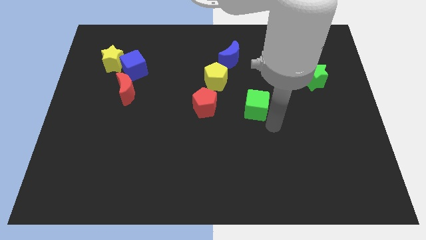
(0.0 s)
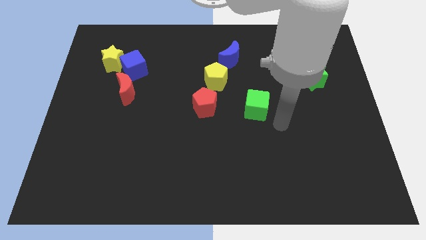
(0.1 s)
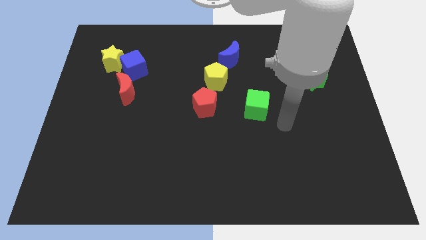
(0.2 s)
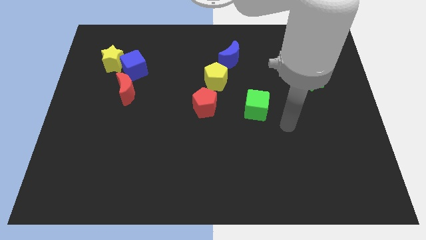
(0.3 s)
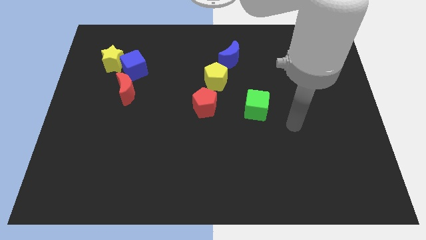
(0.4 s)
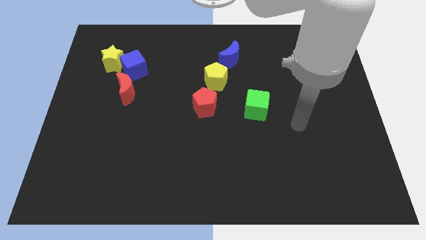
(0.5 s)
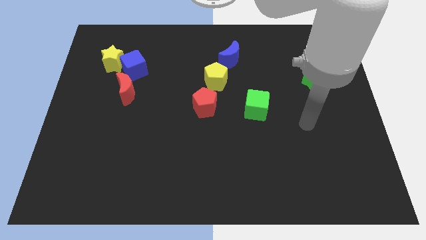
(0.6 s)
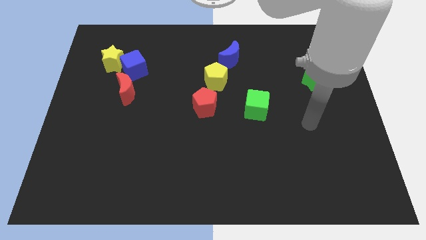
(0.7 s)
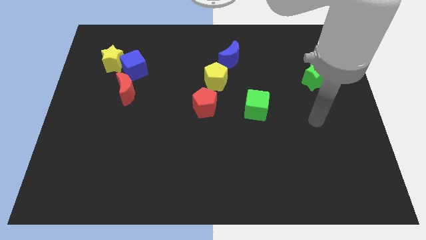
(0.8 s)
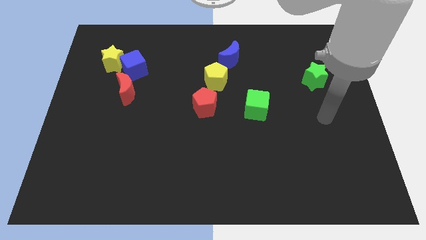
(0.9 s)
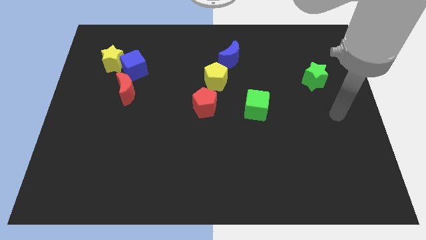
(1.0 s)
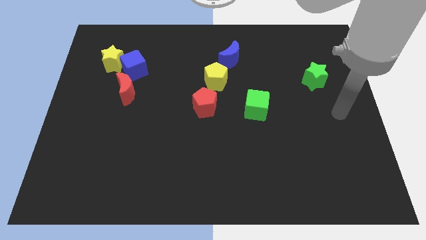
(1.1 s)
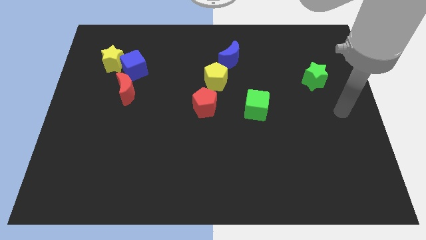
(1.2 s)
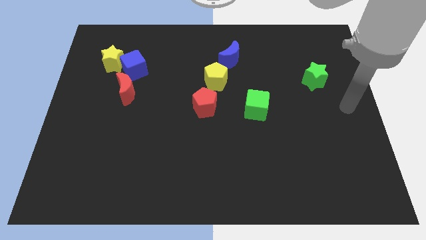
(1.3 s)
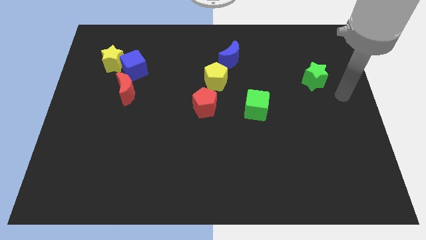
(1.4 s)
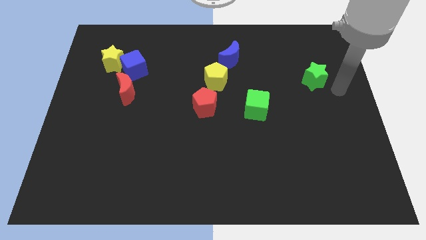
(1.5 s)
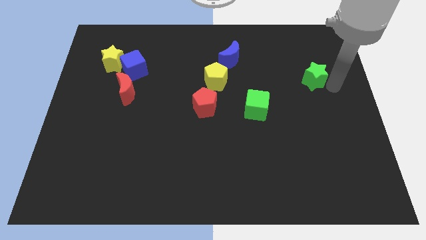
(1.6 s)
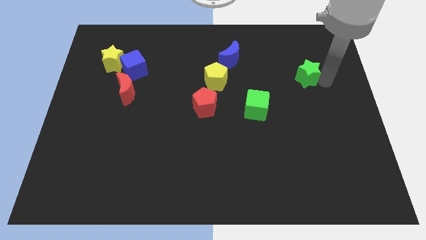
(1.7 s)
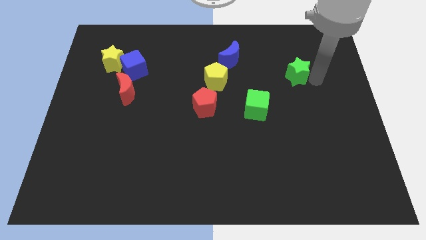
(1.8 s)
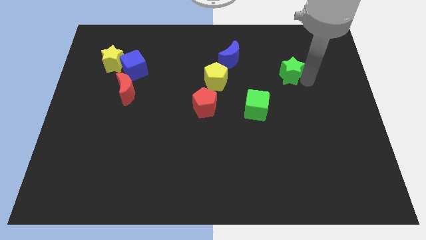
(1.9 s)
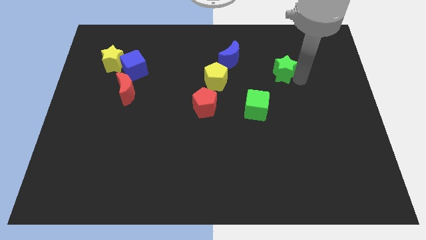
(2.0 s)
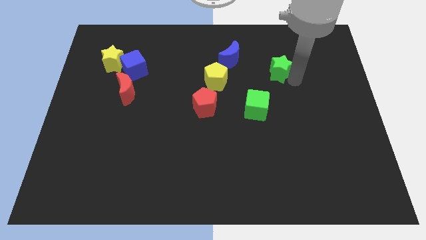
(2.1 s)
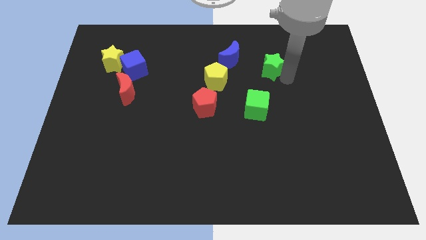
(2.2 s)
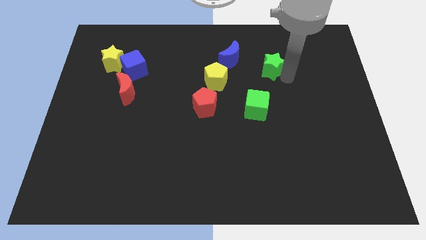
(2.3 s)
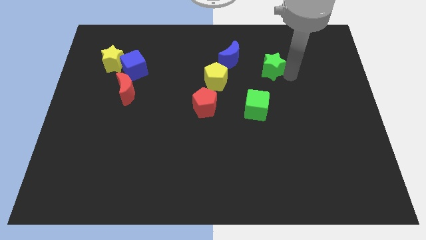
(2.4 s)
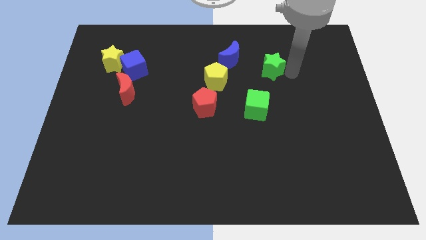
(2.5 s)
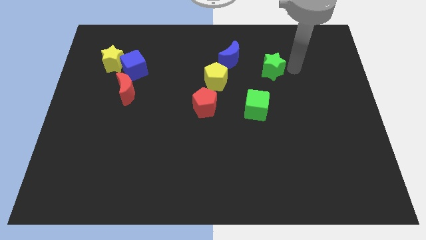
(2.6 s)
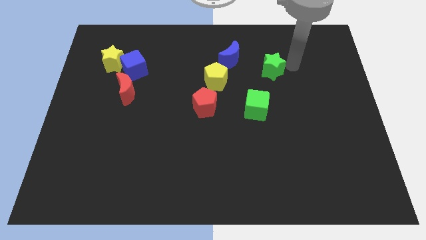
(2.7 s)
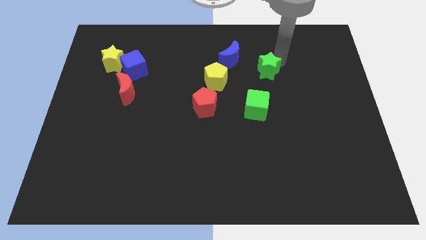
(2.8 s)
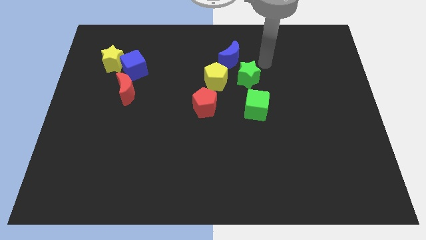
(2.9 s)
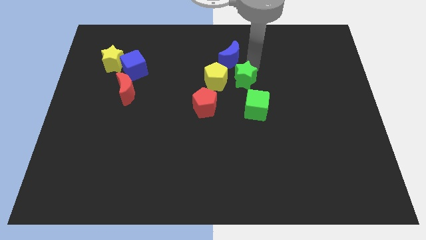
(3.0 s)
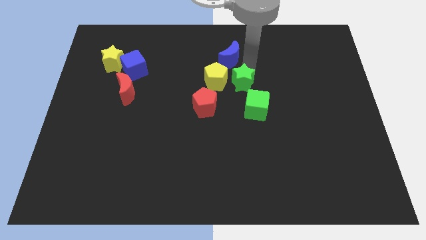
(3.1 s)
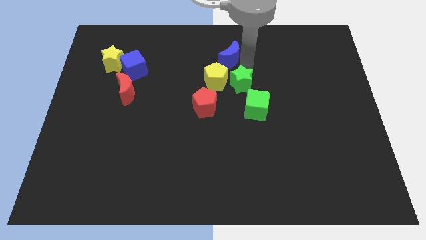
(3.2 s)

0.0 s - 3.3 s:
slide the green star close to the right side of the yellow pentagon

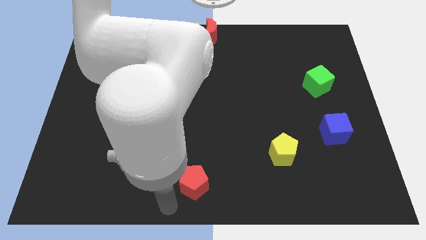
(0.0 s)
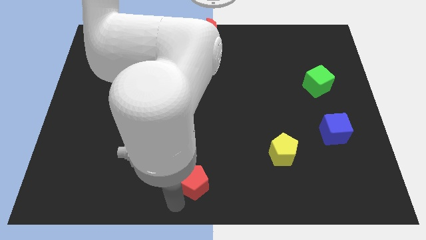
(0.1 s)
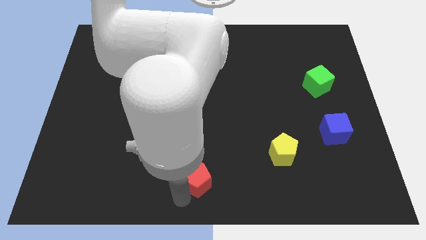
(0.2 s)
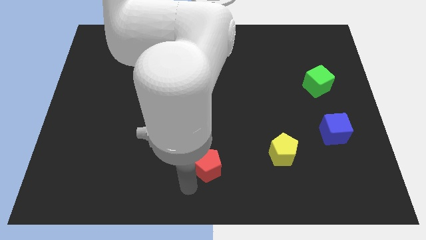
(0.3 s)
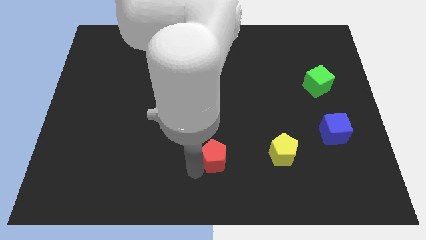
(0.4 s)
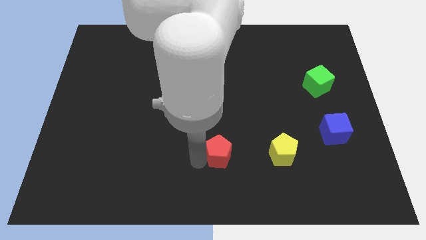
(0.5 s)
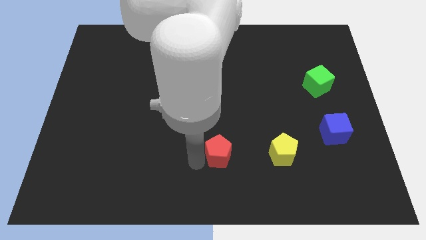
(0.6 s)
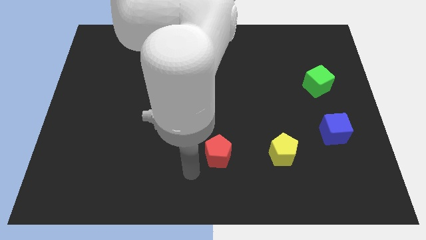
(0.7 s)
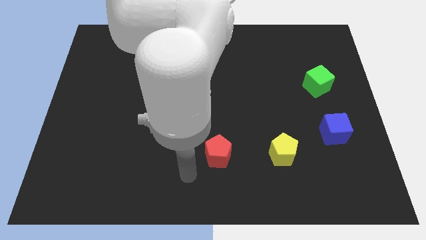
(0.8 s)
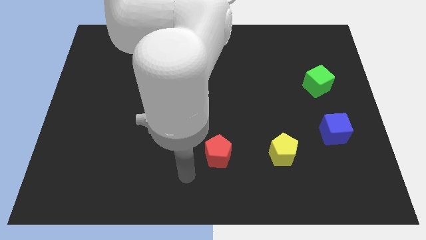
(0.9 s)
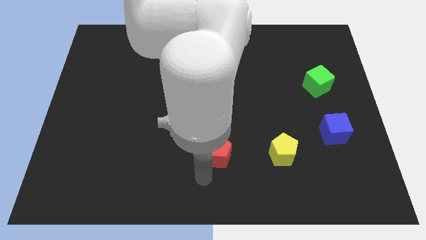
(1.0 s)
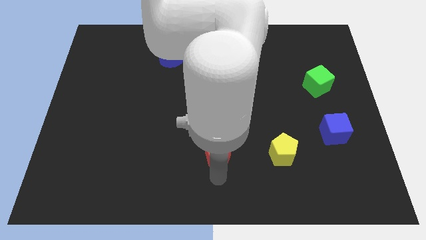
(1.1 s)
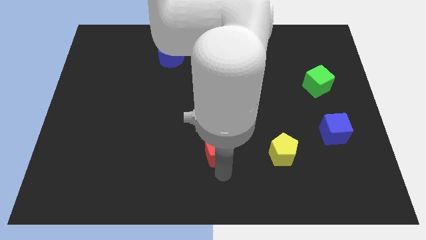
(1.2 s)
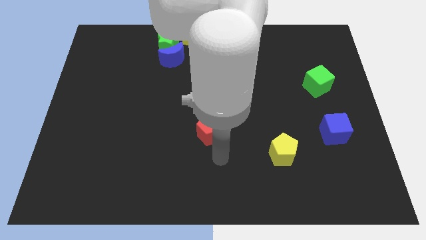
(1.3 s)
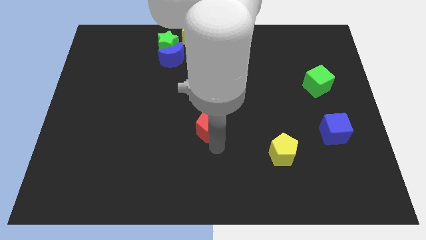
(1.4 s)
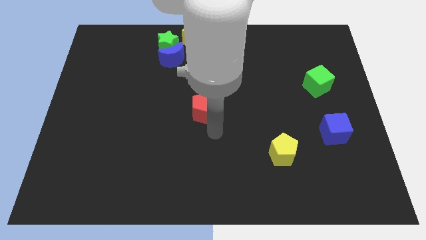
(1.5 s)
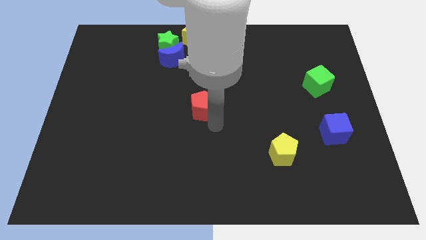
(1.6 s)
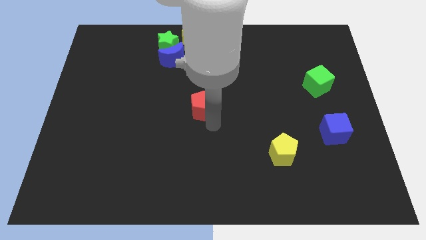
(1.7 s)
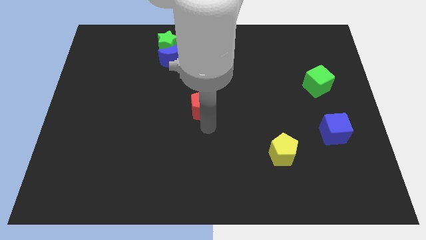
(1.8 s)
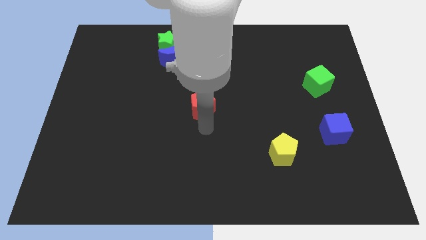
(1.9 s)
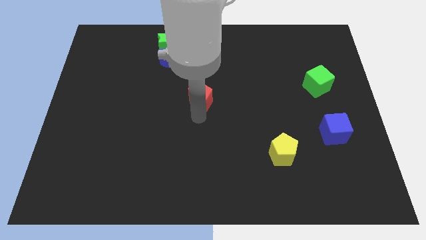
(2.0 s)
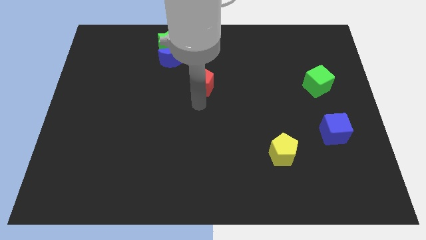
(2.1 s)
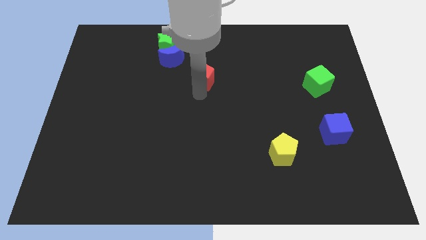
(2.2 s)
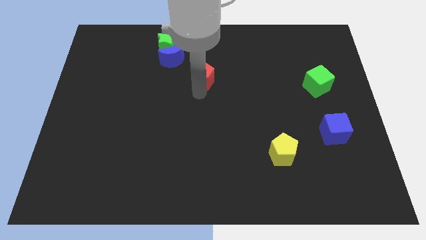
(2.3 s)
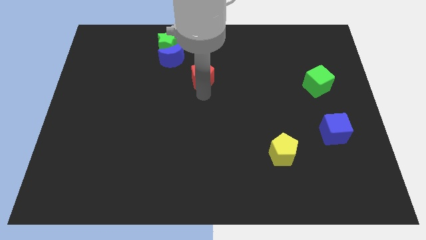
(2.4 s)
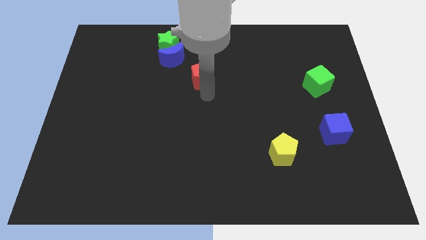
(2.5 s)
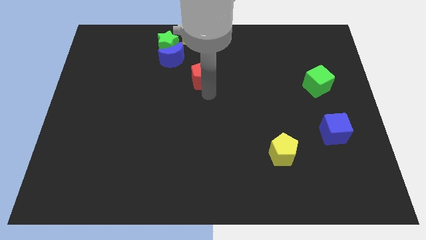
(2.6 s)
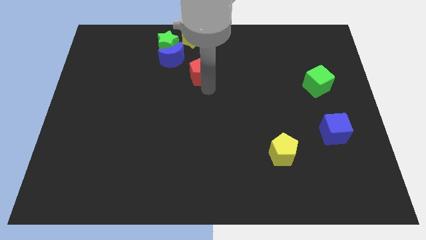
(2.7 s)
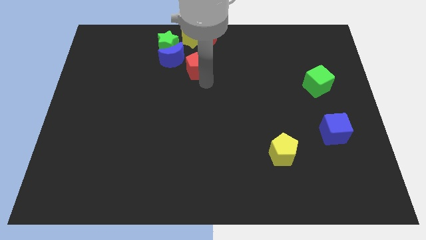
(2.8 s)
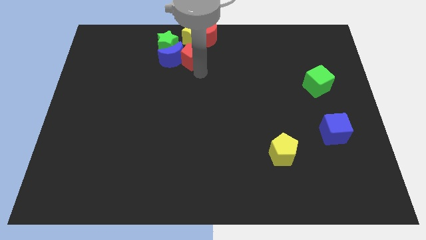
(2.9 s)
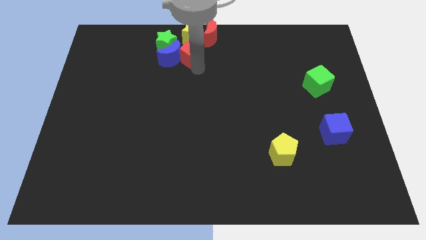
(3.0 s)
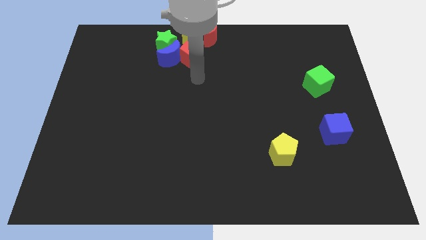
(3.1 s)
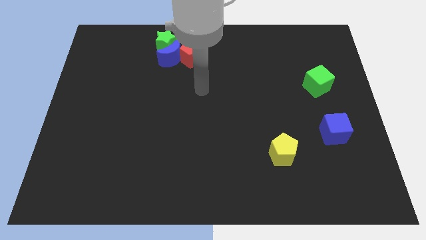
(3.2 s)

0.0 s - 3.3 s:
move the red pentagon into the group of blocks

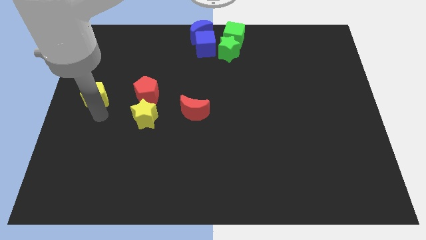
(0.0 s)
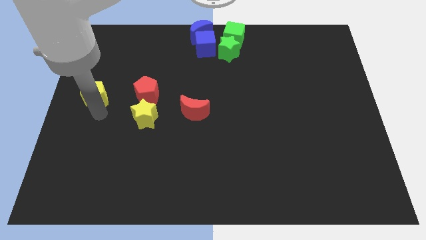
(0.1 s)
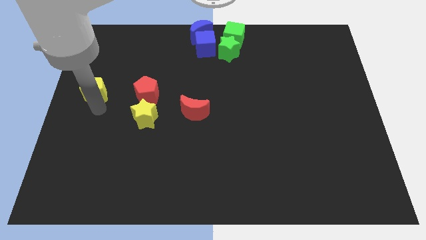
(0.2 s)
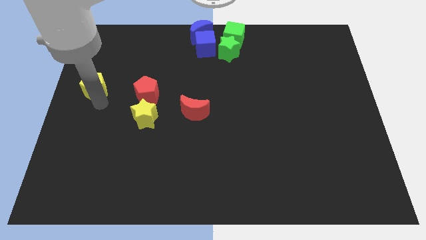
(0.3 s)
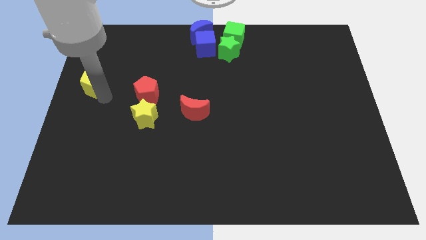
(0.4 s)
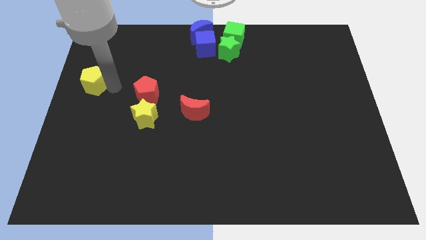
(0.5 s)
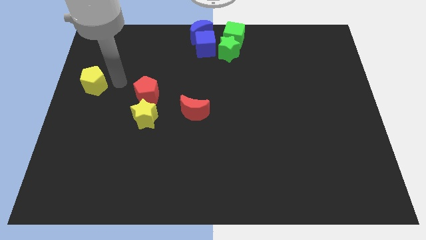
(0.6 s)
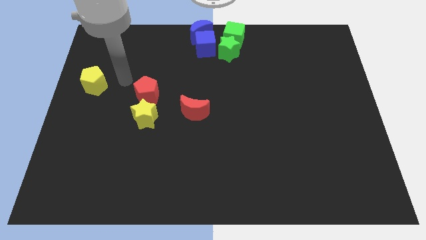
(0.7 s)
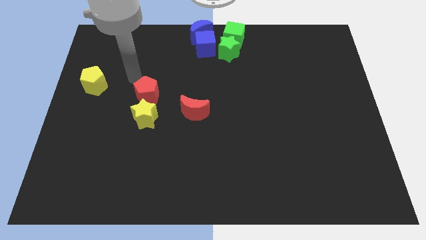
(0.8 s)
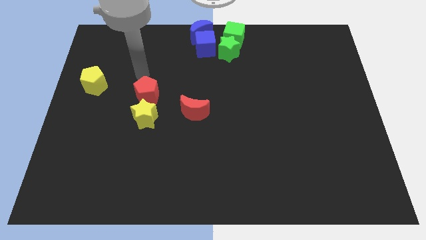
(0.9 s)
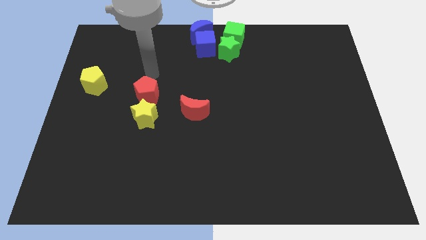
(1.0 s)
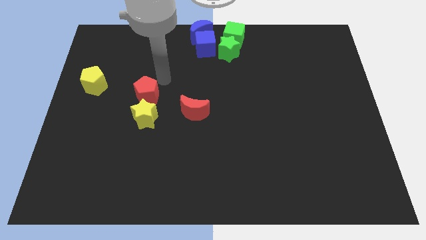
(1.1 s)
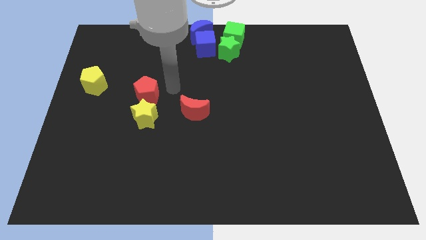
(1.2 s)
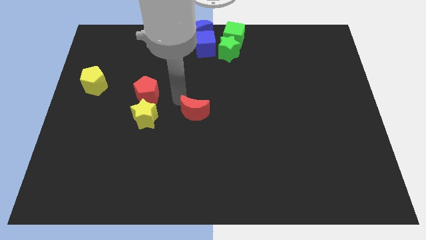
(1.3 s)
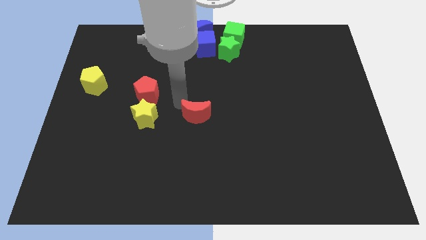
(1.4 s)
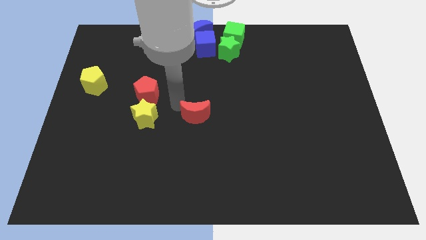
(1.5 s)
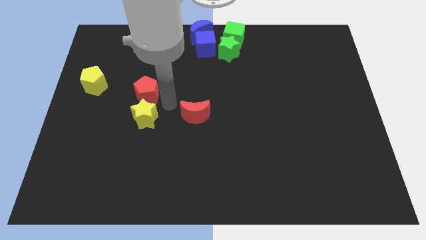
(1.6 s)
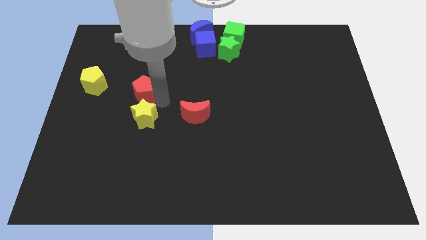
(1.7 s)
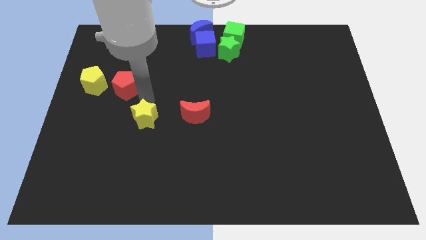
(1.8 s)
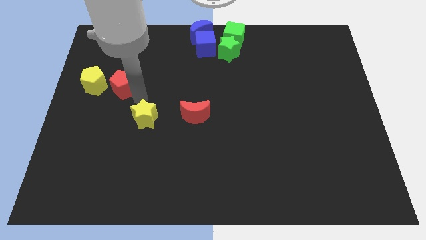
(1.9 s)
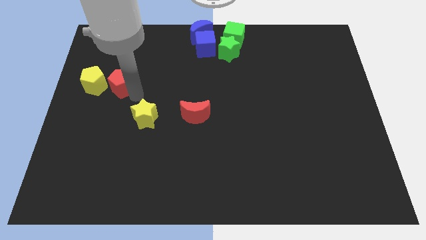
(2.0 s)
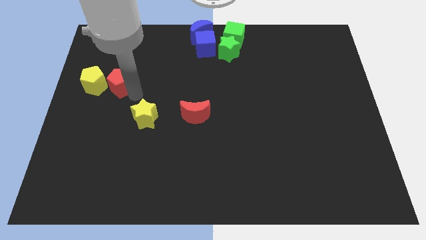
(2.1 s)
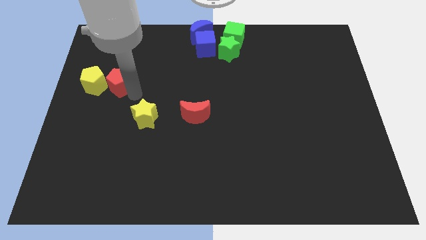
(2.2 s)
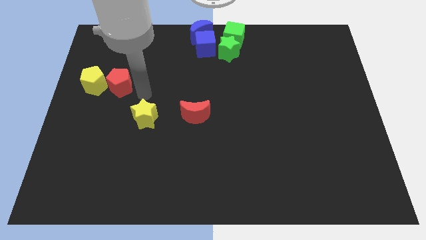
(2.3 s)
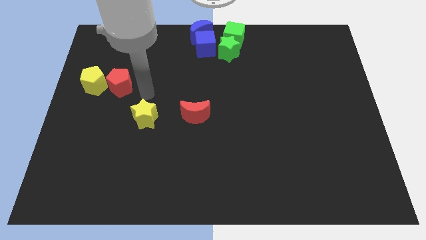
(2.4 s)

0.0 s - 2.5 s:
move the red pentagon close to the right of the yellow pentagon
